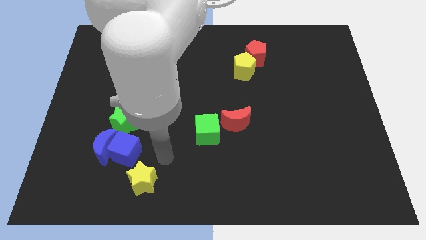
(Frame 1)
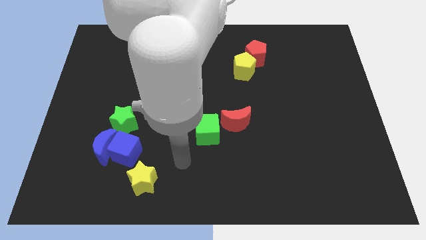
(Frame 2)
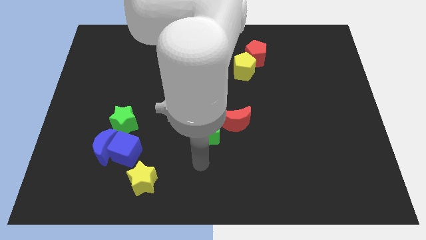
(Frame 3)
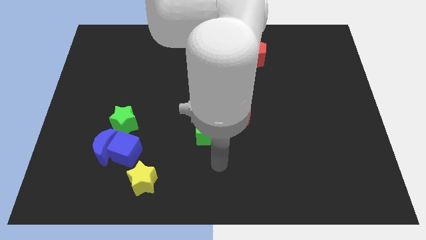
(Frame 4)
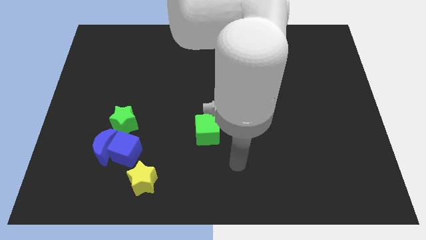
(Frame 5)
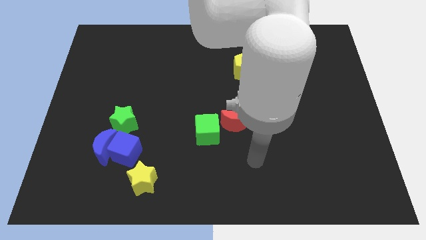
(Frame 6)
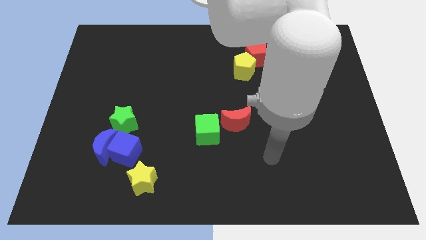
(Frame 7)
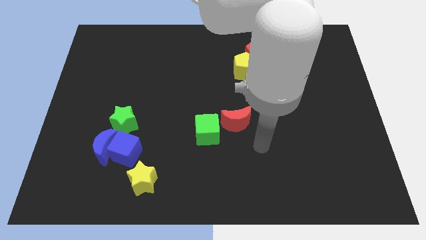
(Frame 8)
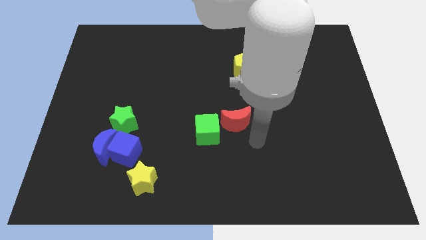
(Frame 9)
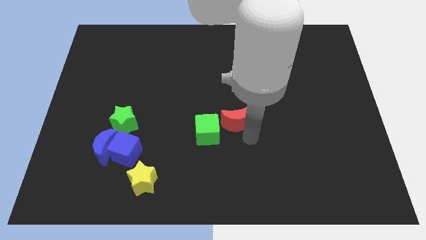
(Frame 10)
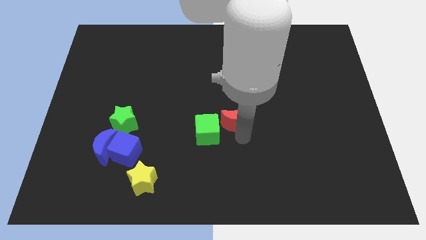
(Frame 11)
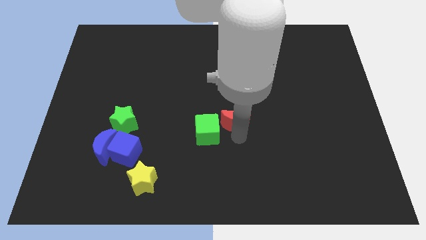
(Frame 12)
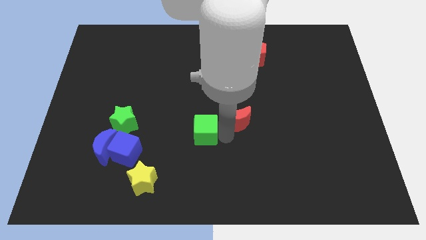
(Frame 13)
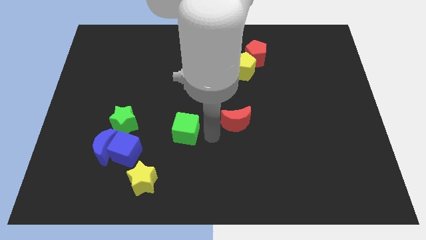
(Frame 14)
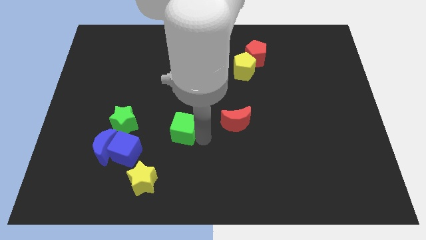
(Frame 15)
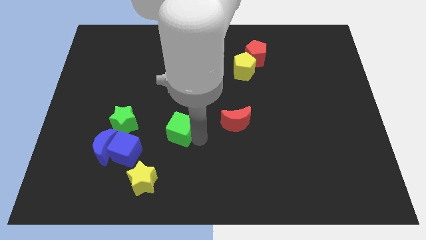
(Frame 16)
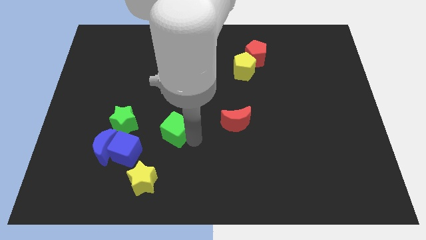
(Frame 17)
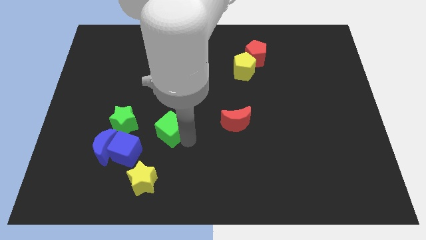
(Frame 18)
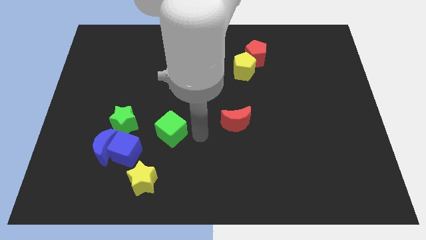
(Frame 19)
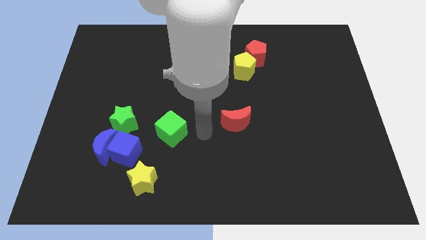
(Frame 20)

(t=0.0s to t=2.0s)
separate the green cube from the red moon

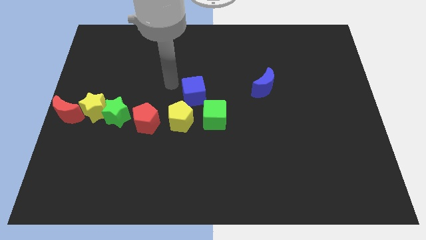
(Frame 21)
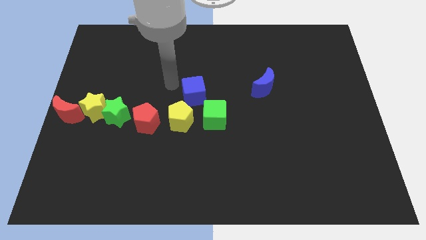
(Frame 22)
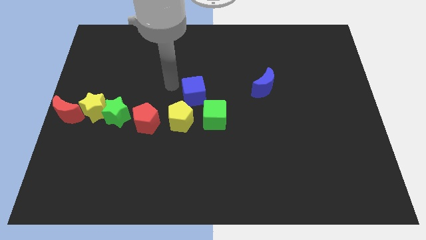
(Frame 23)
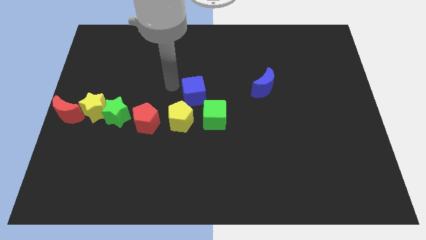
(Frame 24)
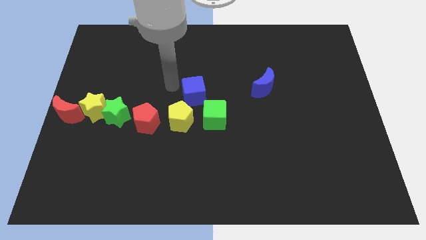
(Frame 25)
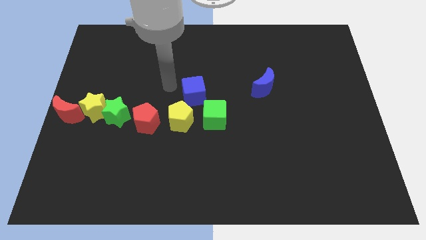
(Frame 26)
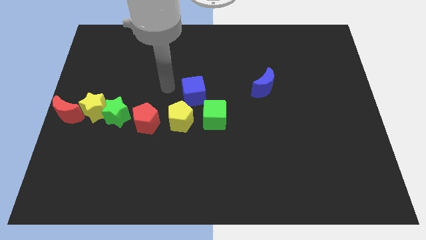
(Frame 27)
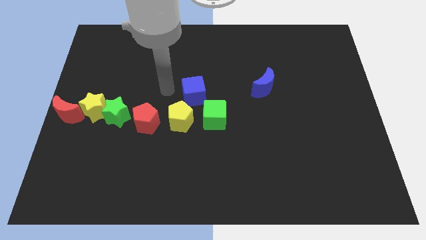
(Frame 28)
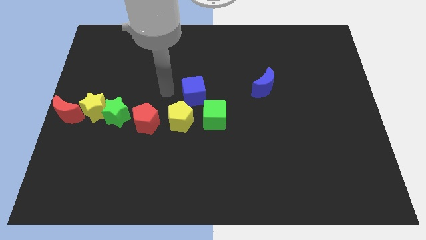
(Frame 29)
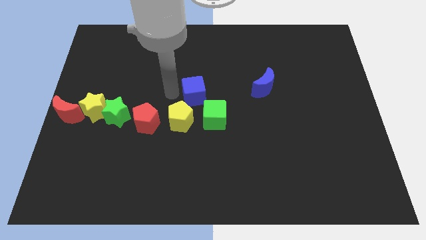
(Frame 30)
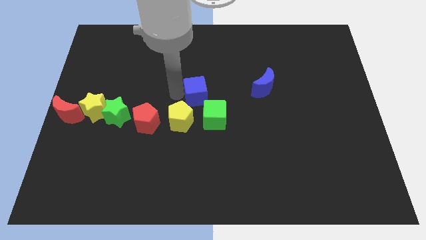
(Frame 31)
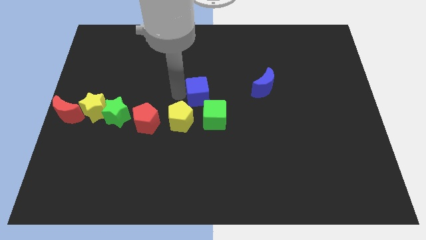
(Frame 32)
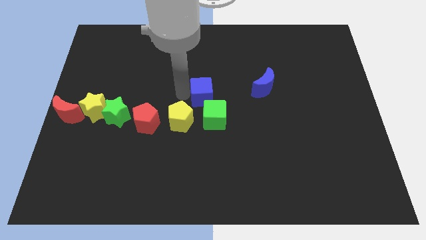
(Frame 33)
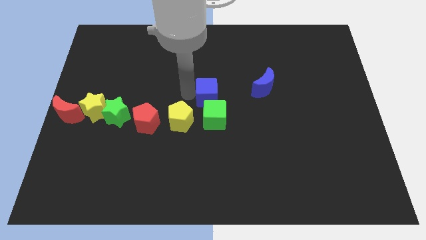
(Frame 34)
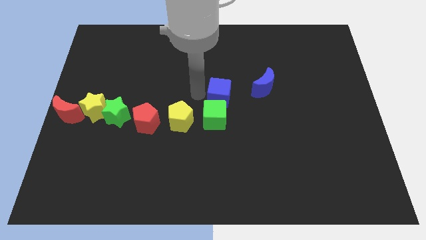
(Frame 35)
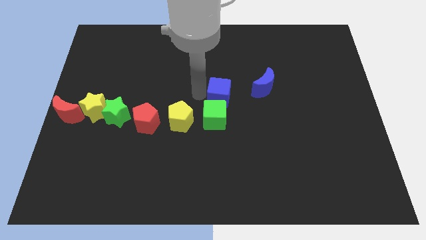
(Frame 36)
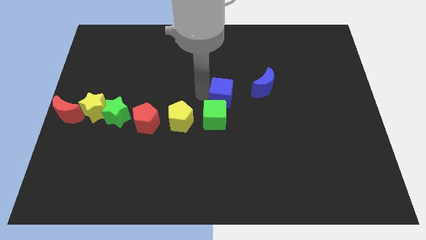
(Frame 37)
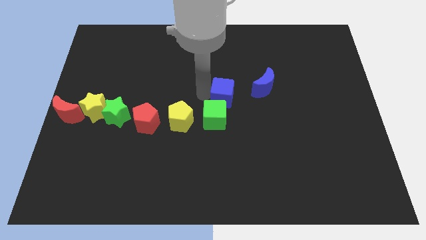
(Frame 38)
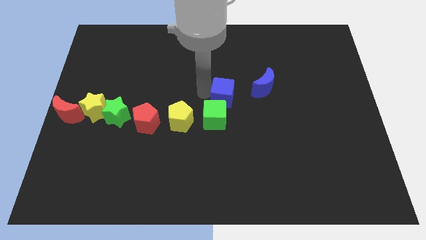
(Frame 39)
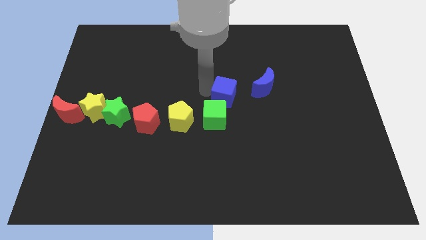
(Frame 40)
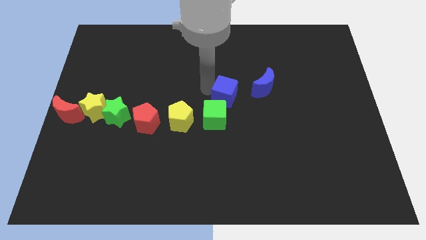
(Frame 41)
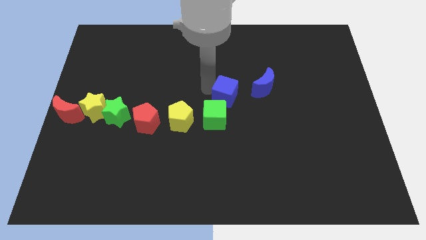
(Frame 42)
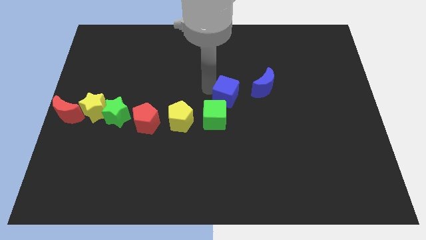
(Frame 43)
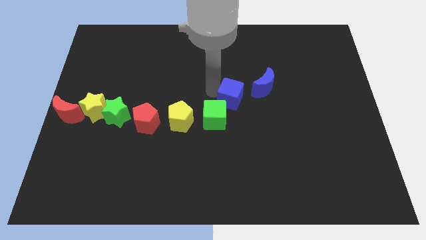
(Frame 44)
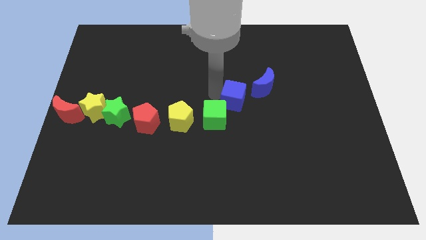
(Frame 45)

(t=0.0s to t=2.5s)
push the blue moon to the right side

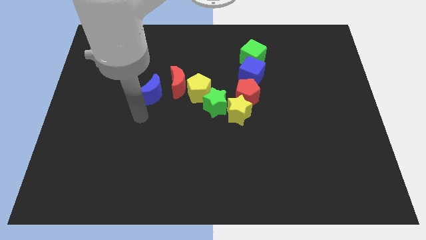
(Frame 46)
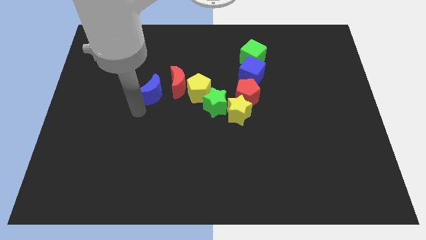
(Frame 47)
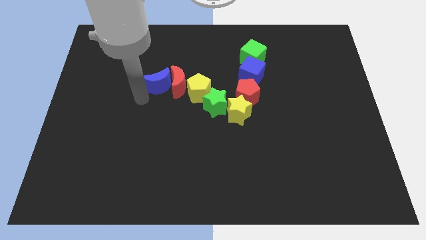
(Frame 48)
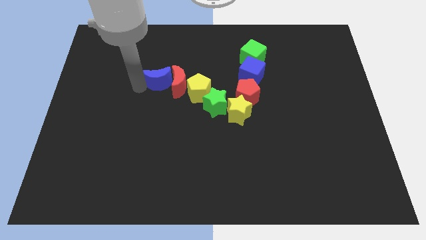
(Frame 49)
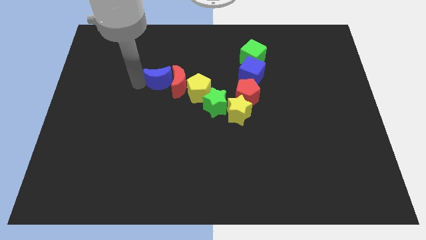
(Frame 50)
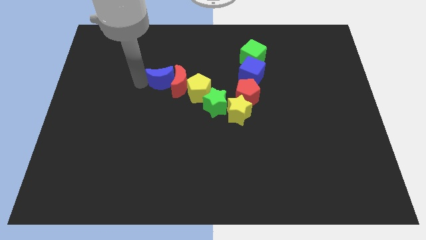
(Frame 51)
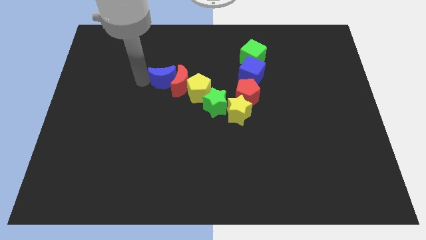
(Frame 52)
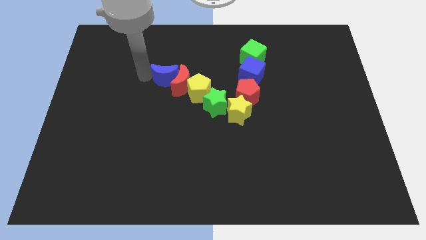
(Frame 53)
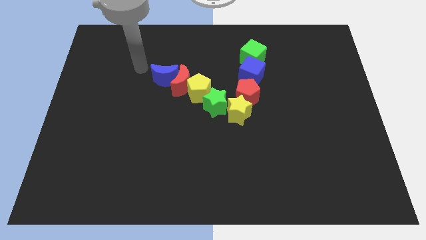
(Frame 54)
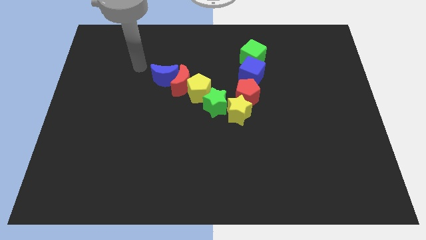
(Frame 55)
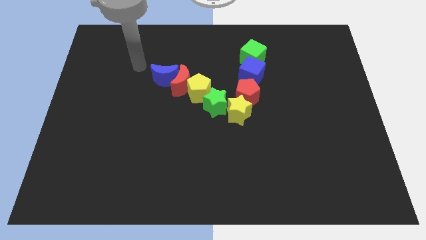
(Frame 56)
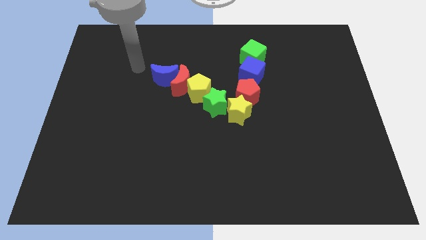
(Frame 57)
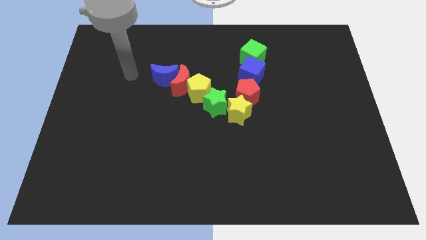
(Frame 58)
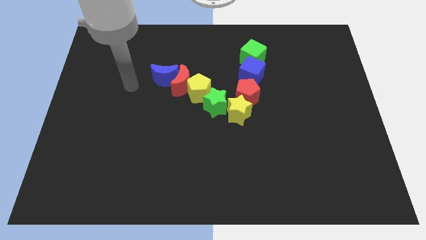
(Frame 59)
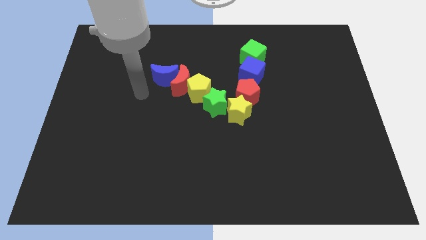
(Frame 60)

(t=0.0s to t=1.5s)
slide the blue moon into the red moon

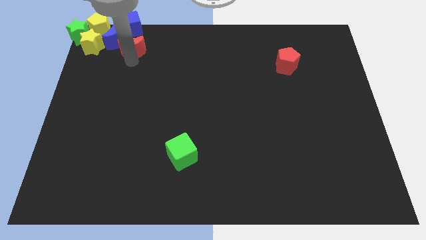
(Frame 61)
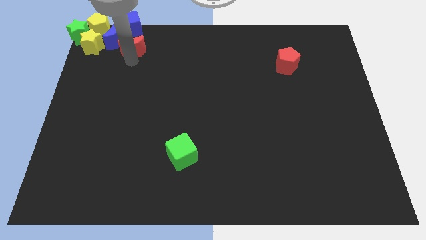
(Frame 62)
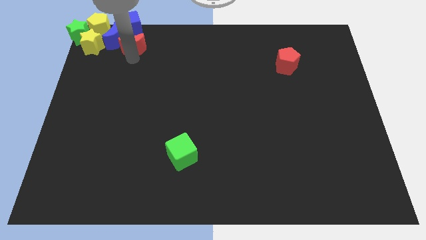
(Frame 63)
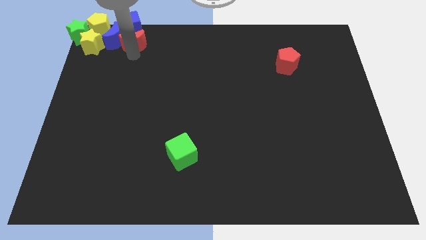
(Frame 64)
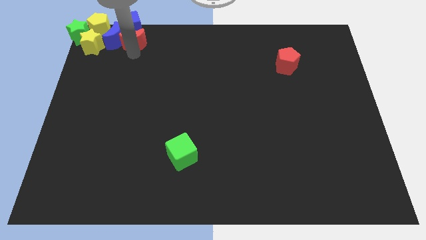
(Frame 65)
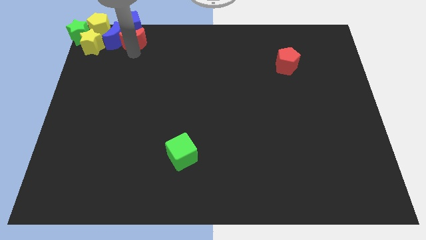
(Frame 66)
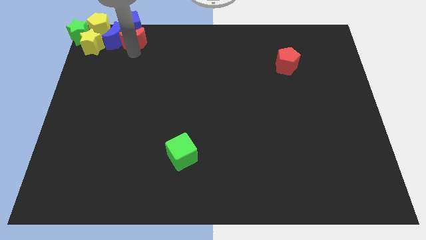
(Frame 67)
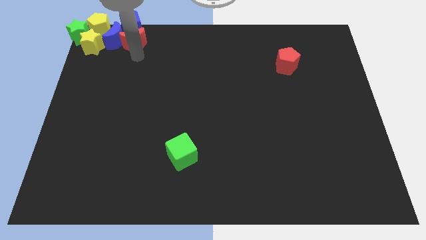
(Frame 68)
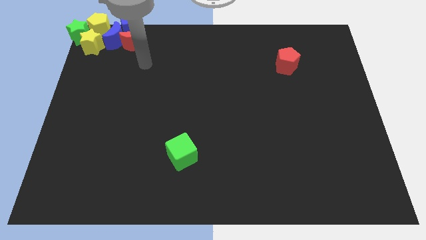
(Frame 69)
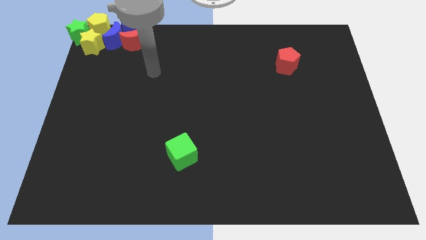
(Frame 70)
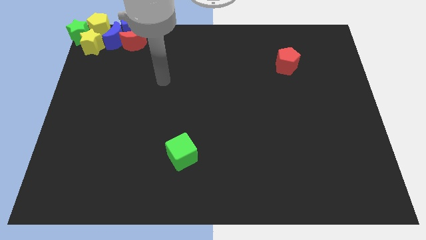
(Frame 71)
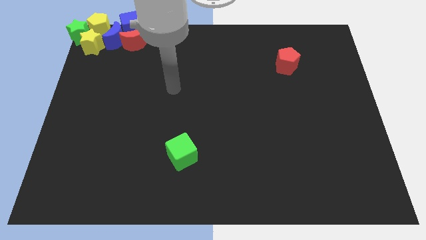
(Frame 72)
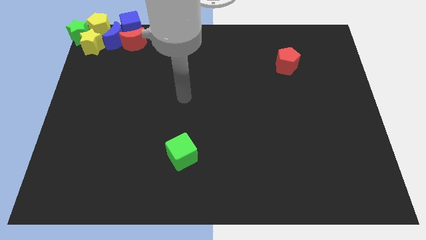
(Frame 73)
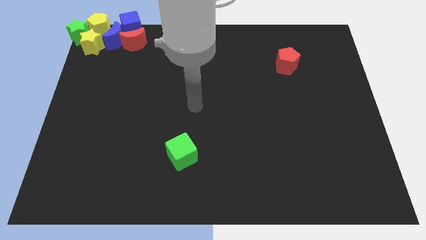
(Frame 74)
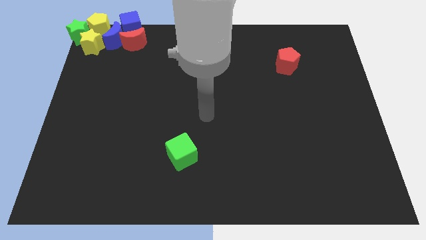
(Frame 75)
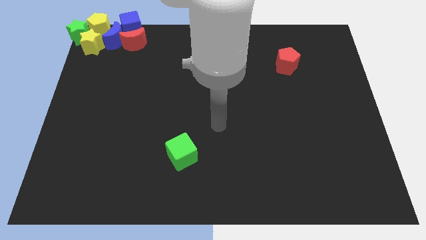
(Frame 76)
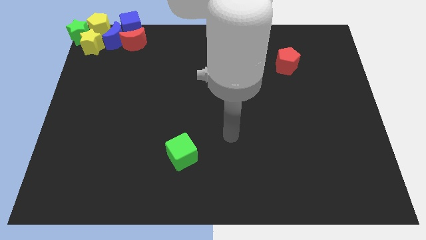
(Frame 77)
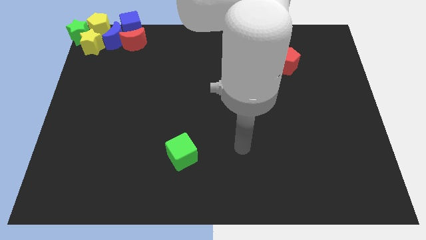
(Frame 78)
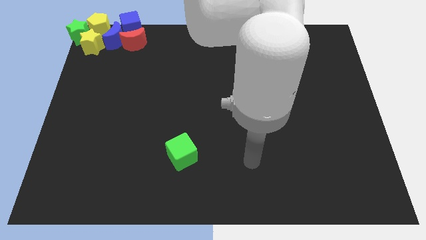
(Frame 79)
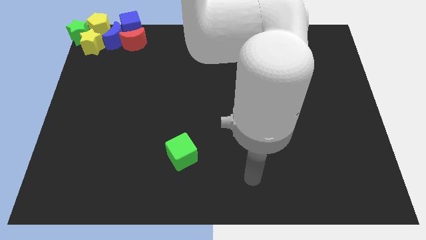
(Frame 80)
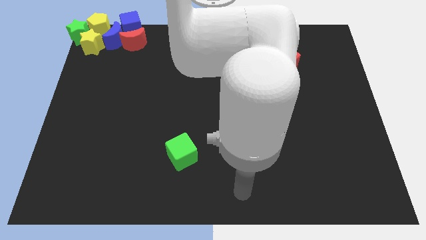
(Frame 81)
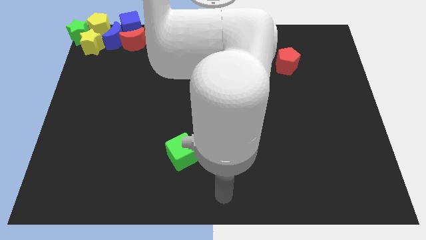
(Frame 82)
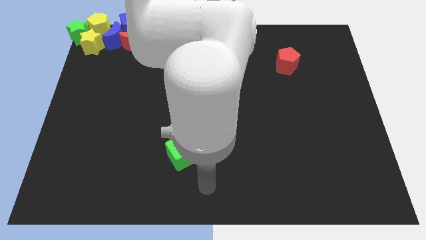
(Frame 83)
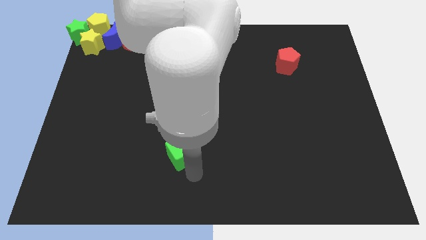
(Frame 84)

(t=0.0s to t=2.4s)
move your arm to the right of the green cube

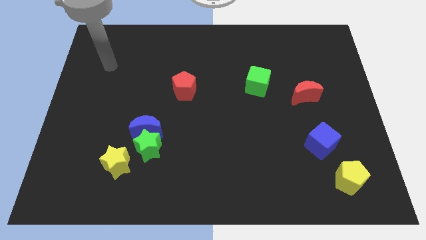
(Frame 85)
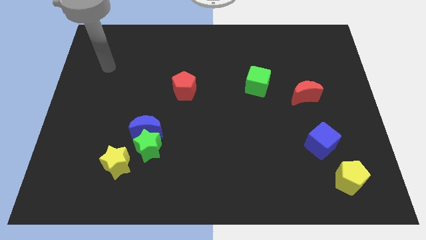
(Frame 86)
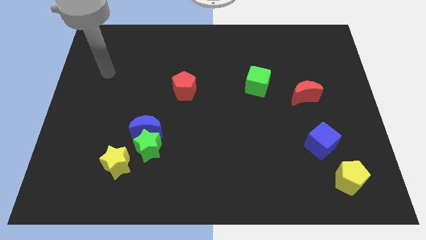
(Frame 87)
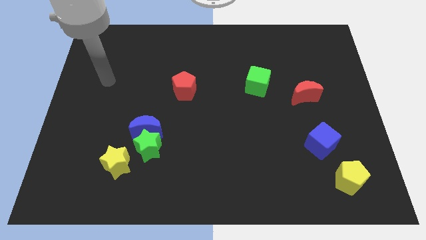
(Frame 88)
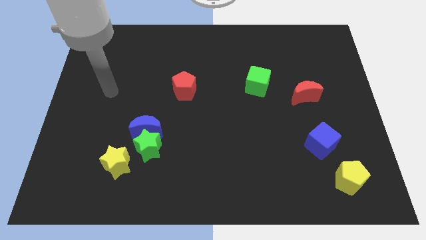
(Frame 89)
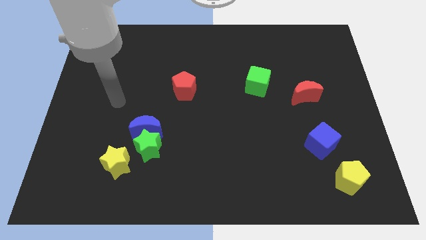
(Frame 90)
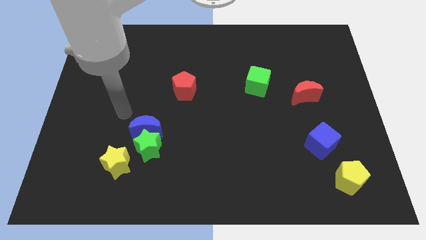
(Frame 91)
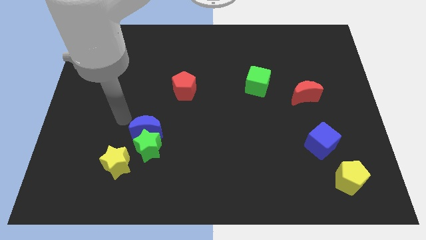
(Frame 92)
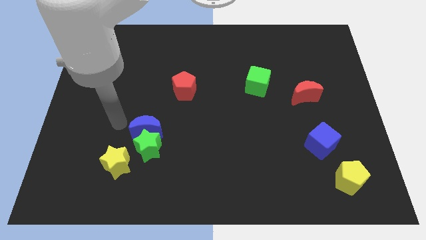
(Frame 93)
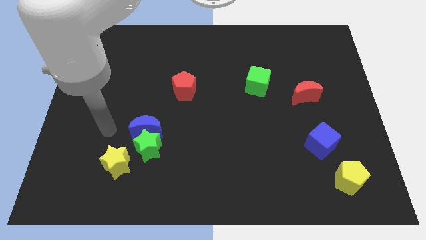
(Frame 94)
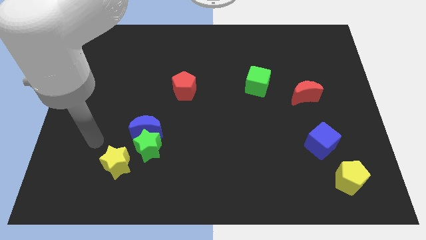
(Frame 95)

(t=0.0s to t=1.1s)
point your arm to the left side of blue moon
